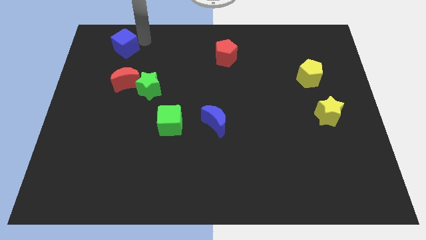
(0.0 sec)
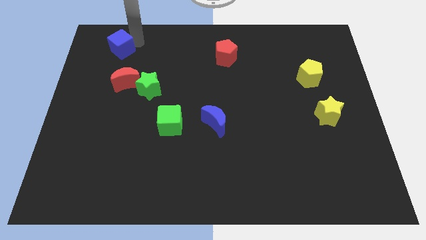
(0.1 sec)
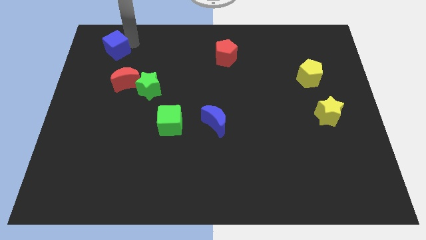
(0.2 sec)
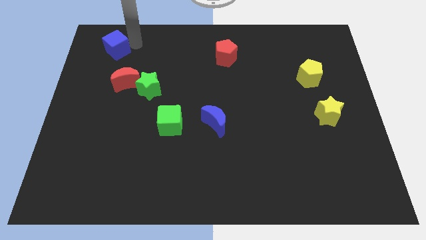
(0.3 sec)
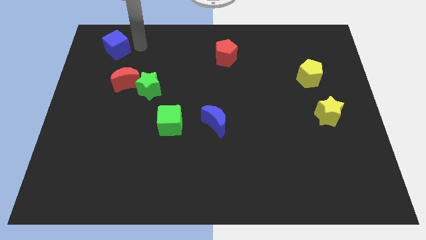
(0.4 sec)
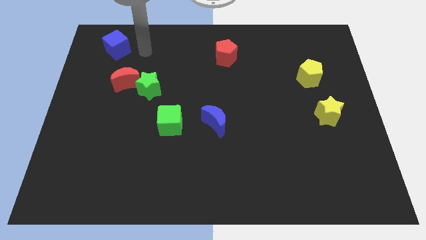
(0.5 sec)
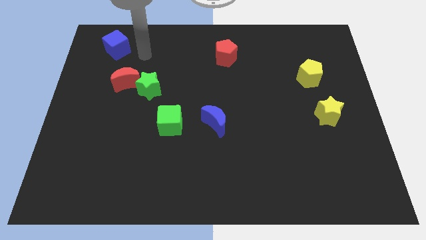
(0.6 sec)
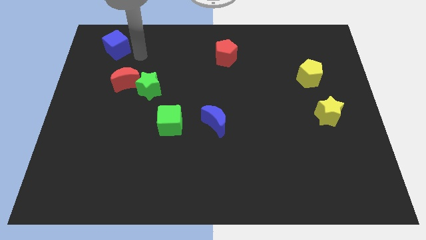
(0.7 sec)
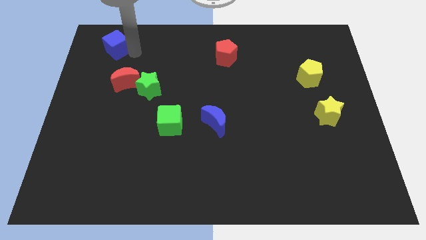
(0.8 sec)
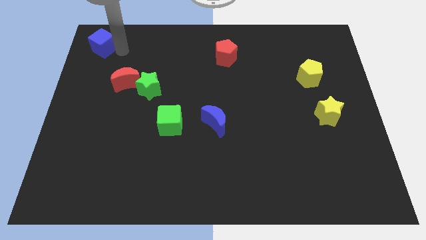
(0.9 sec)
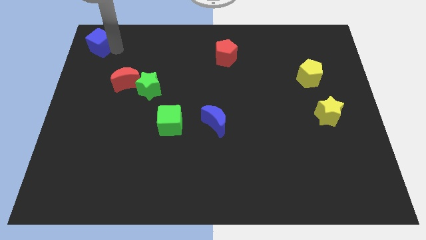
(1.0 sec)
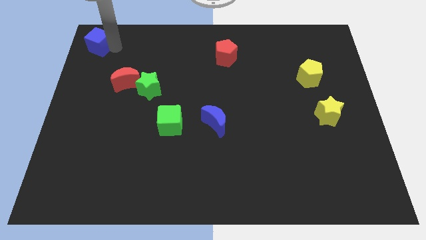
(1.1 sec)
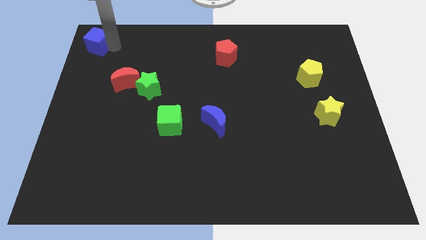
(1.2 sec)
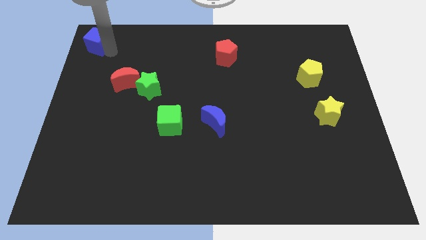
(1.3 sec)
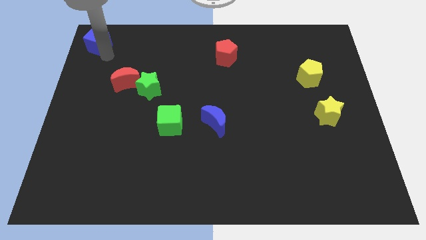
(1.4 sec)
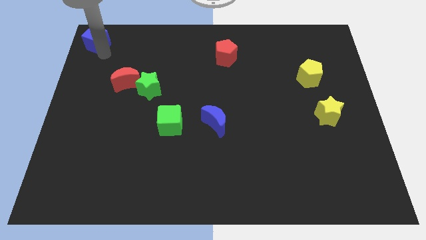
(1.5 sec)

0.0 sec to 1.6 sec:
drag the blue cube to the top left

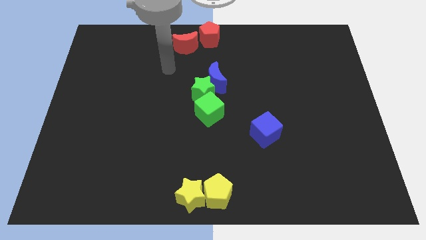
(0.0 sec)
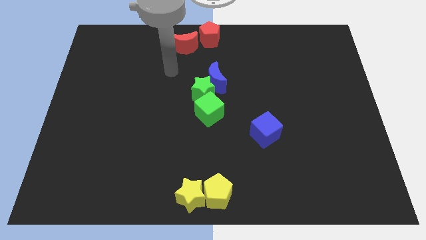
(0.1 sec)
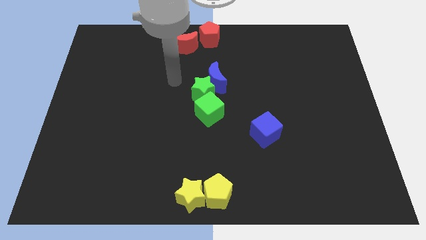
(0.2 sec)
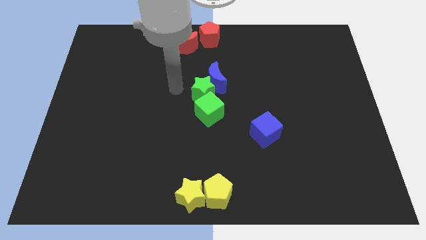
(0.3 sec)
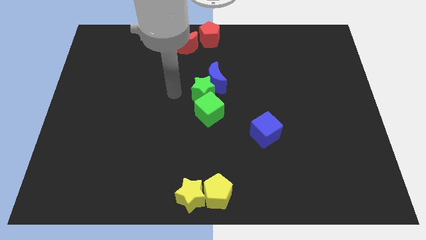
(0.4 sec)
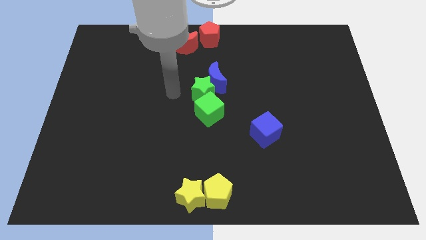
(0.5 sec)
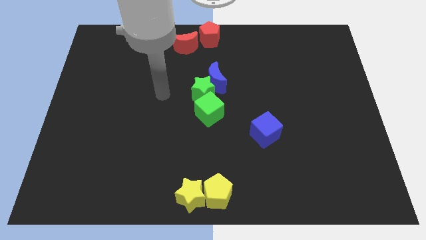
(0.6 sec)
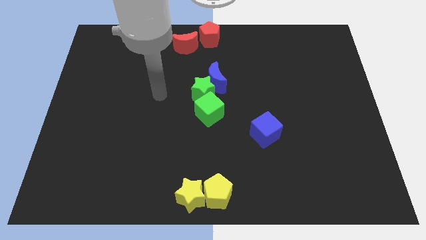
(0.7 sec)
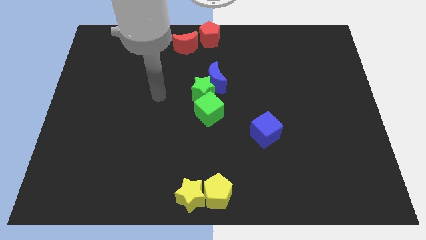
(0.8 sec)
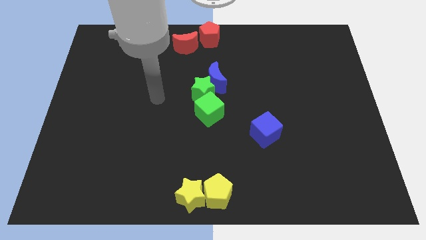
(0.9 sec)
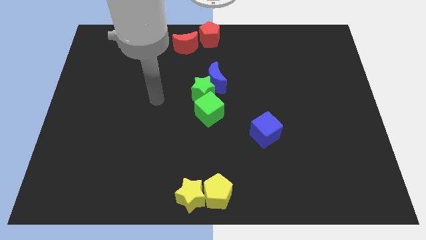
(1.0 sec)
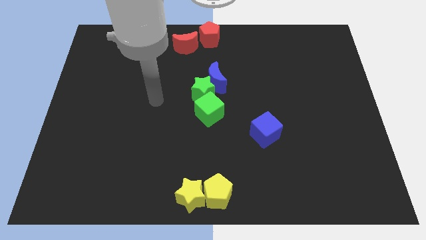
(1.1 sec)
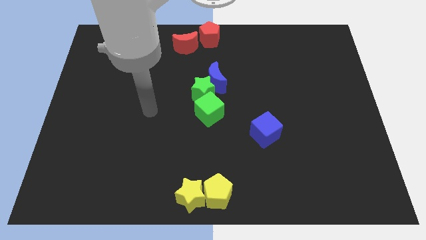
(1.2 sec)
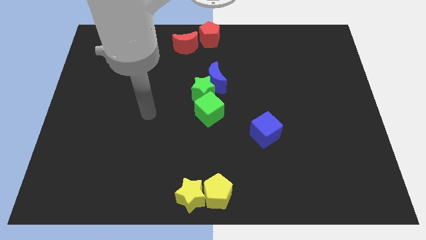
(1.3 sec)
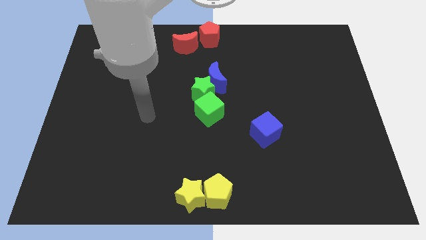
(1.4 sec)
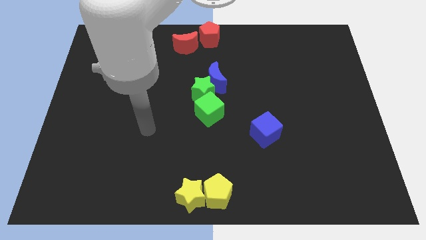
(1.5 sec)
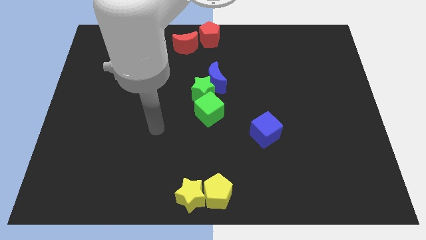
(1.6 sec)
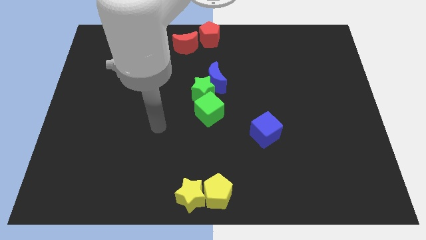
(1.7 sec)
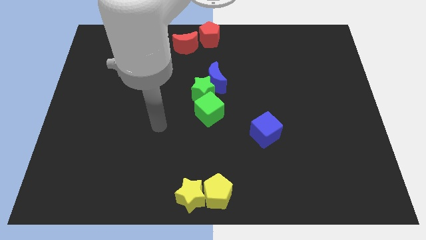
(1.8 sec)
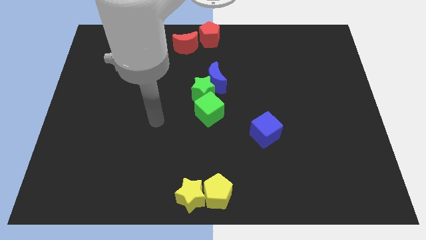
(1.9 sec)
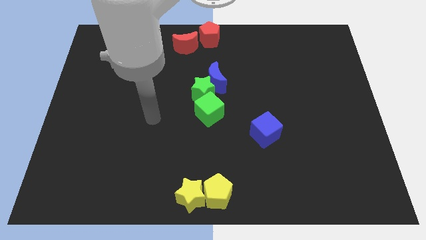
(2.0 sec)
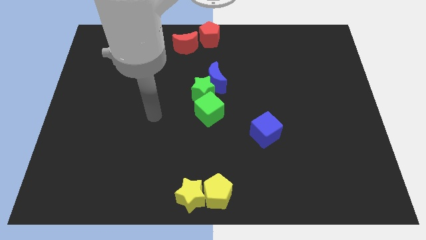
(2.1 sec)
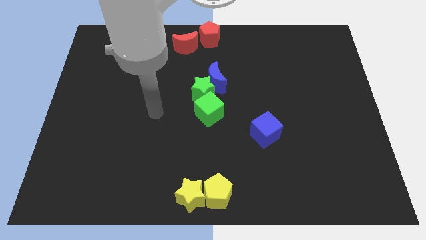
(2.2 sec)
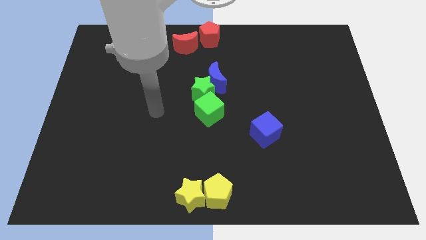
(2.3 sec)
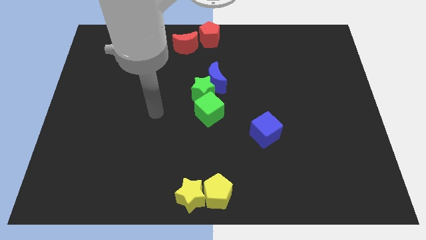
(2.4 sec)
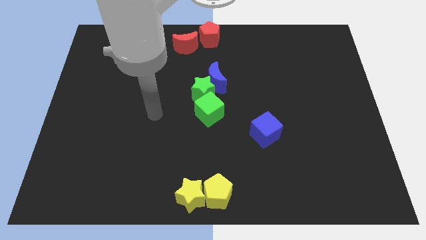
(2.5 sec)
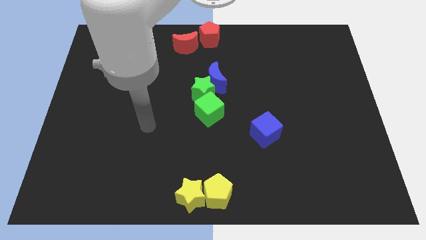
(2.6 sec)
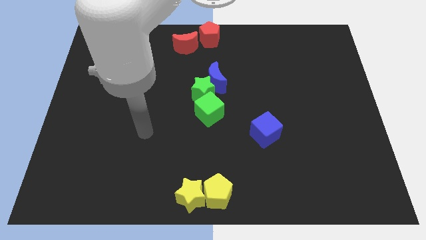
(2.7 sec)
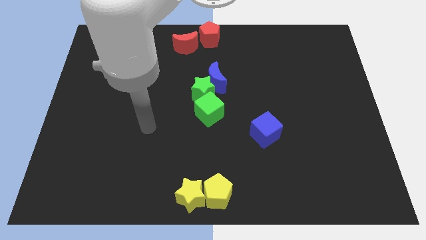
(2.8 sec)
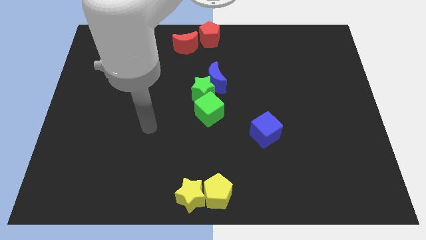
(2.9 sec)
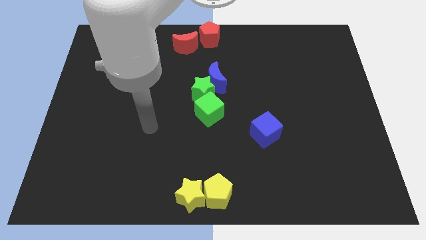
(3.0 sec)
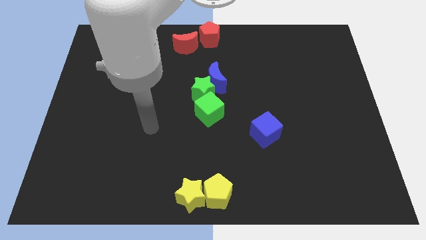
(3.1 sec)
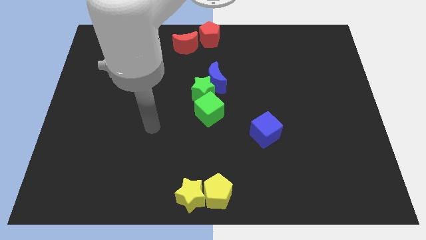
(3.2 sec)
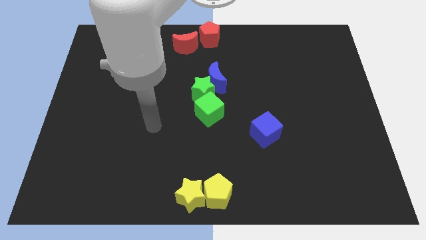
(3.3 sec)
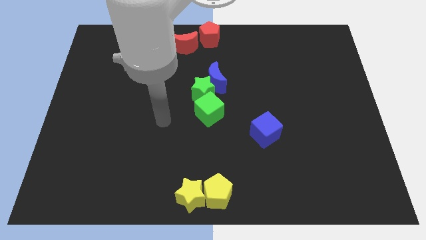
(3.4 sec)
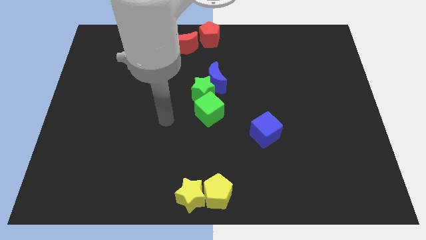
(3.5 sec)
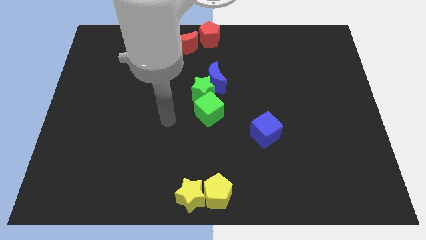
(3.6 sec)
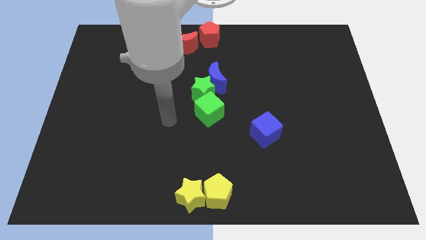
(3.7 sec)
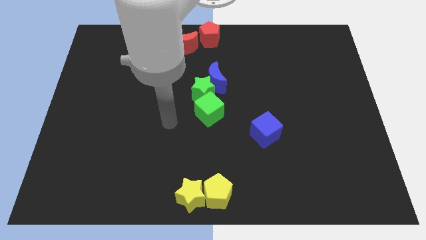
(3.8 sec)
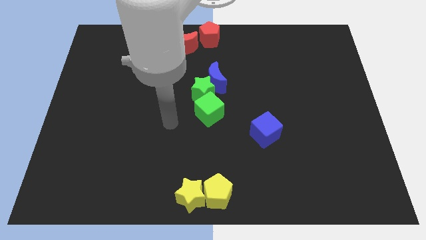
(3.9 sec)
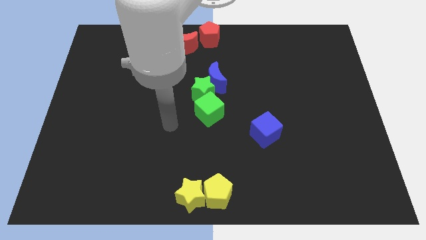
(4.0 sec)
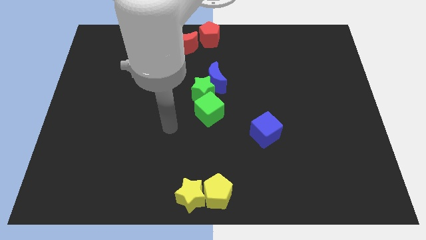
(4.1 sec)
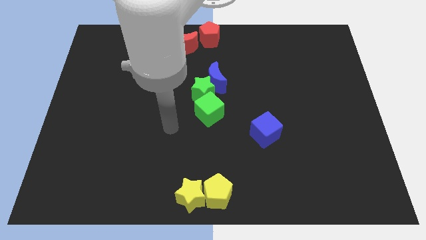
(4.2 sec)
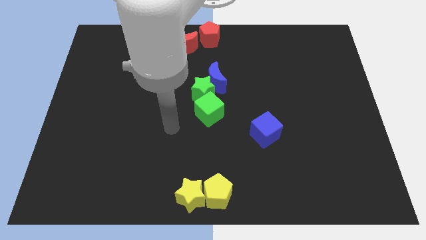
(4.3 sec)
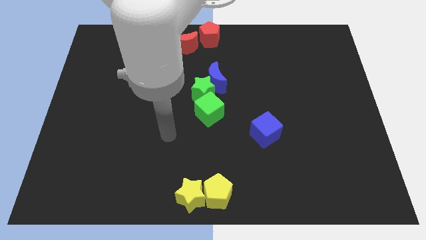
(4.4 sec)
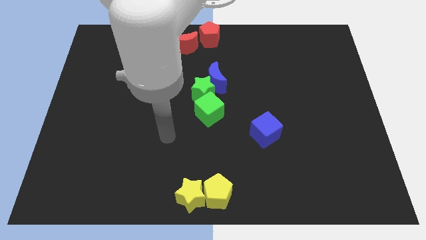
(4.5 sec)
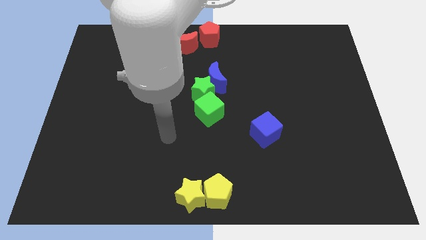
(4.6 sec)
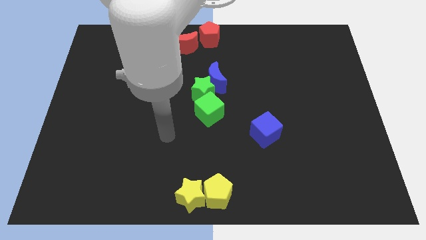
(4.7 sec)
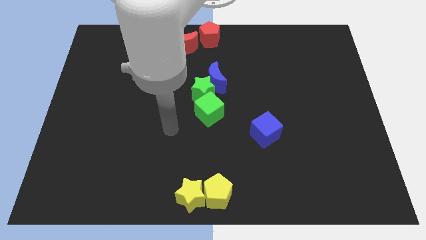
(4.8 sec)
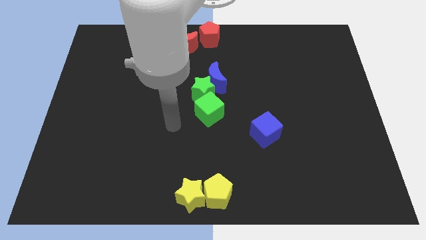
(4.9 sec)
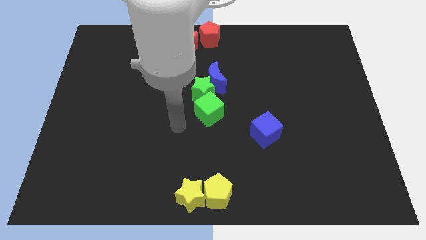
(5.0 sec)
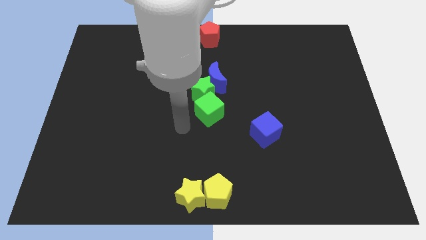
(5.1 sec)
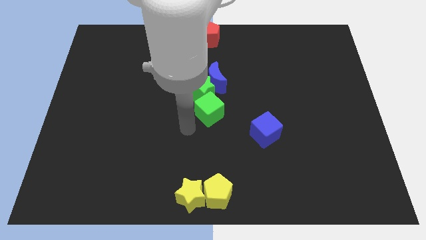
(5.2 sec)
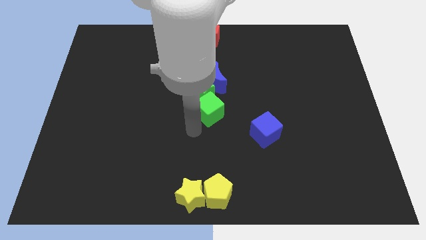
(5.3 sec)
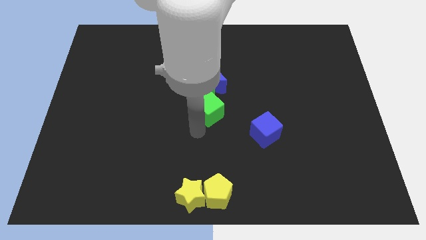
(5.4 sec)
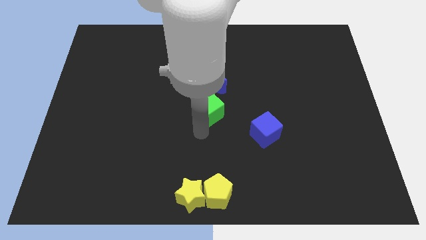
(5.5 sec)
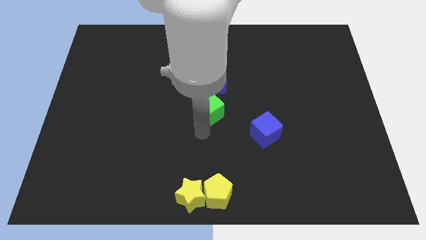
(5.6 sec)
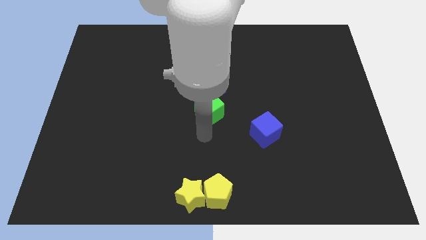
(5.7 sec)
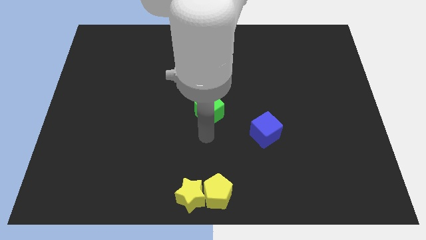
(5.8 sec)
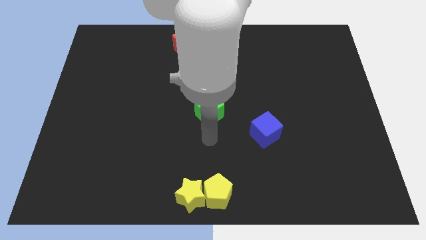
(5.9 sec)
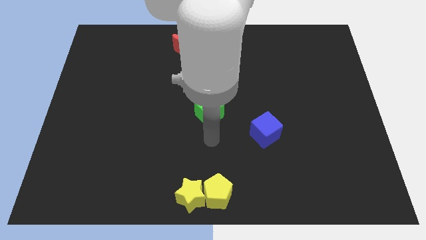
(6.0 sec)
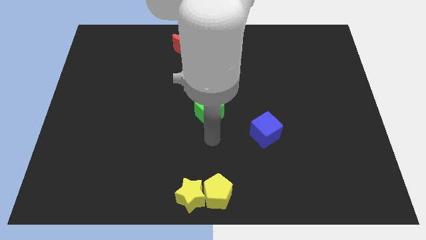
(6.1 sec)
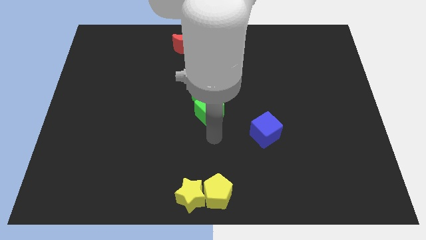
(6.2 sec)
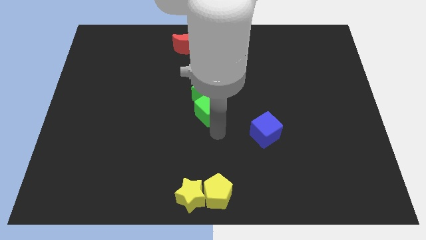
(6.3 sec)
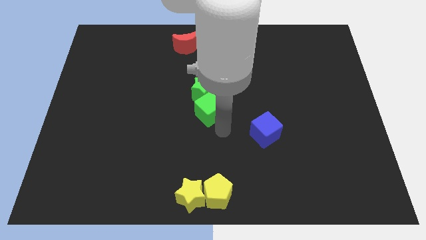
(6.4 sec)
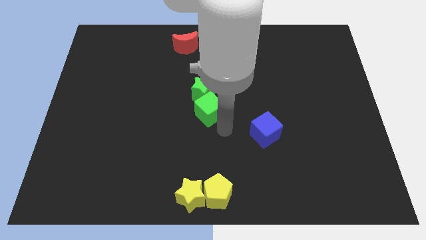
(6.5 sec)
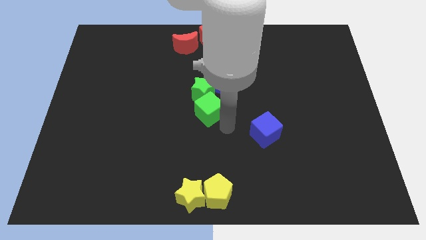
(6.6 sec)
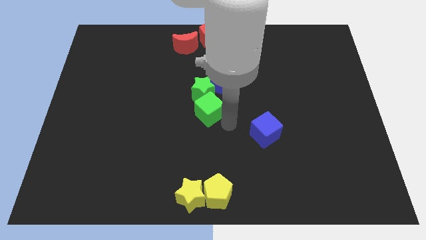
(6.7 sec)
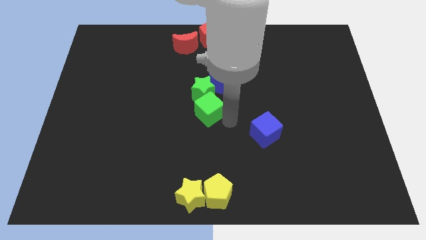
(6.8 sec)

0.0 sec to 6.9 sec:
move the arm right to the green cube

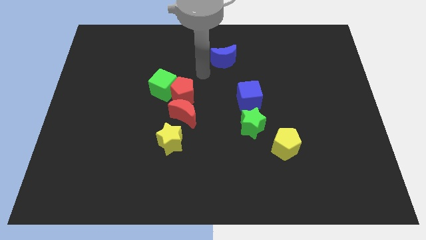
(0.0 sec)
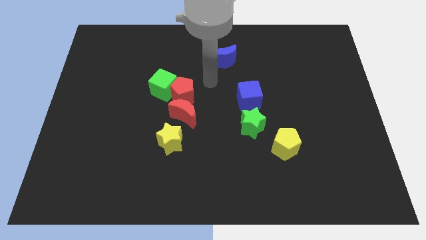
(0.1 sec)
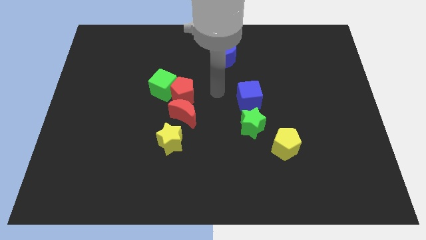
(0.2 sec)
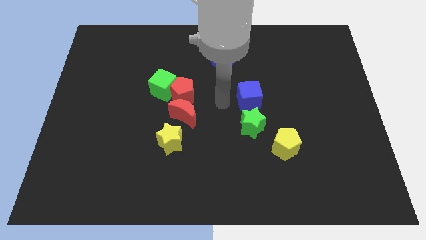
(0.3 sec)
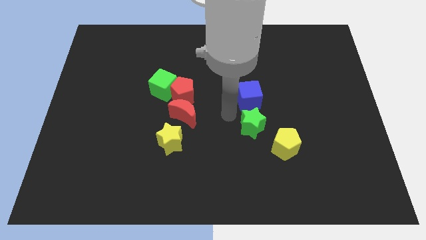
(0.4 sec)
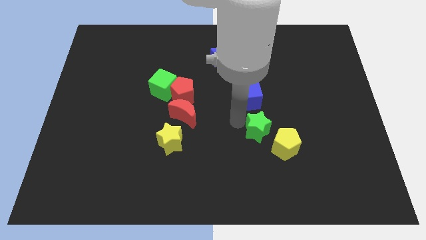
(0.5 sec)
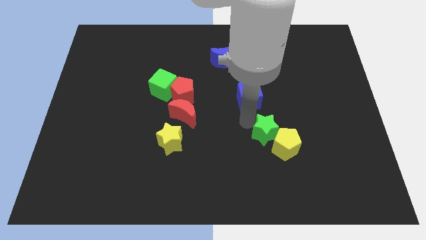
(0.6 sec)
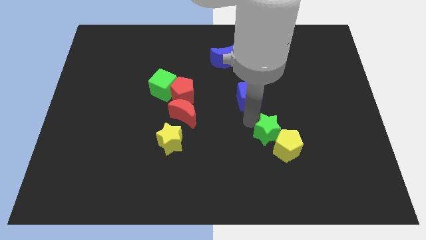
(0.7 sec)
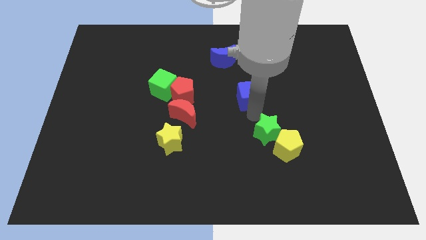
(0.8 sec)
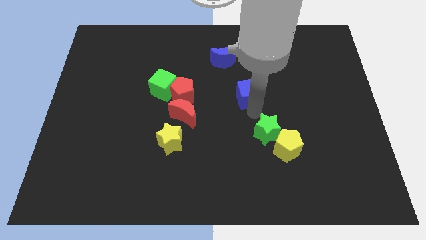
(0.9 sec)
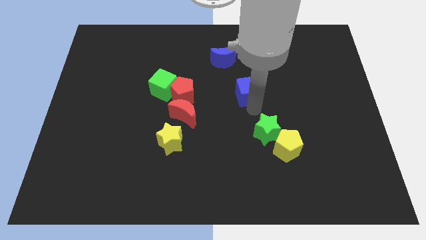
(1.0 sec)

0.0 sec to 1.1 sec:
move the green star beside the yellow pentagon
